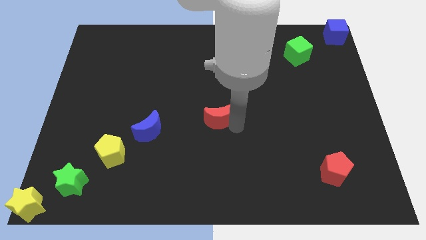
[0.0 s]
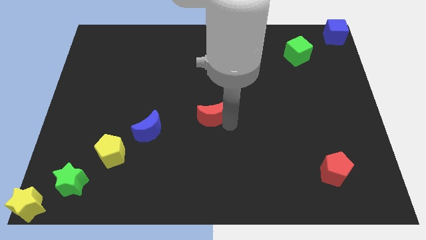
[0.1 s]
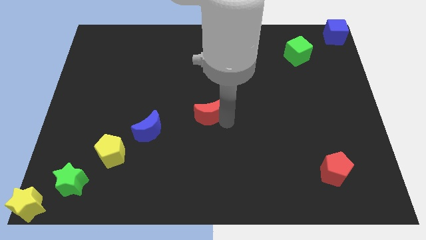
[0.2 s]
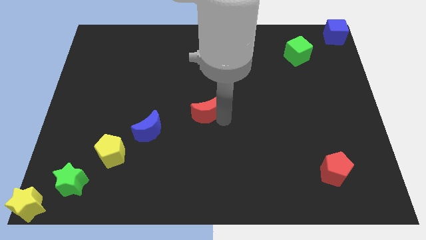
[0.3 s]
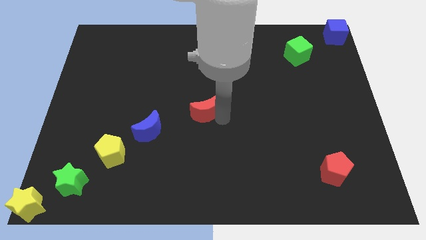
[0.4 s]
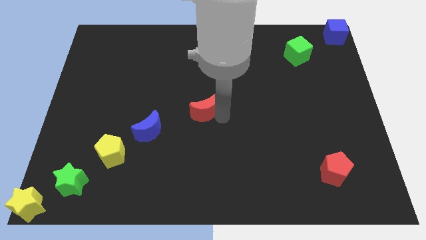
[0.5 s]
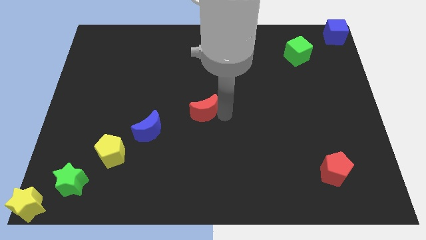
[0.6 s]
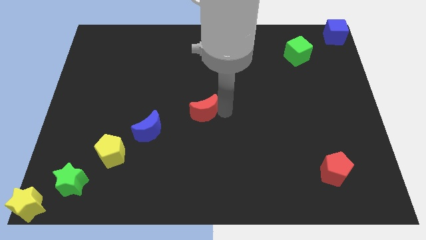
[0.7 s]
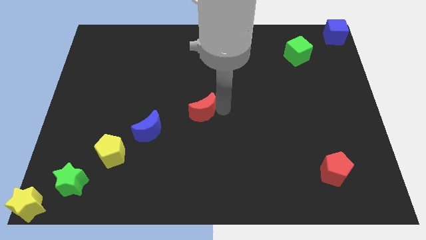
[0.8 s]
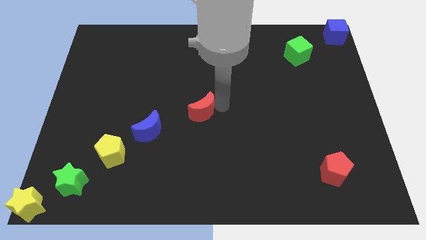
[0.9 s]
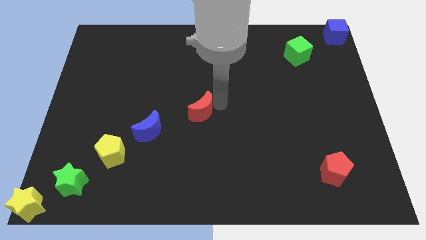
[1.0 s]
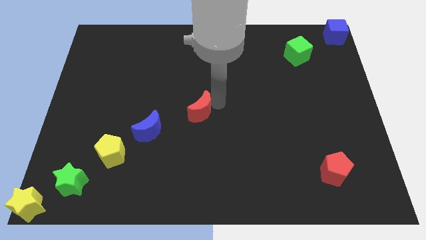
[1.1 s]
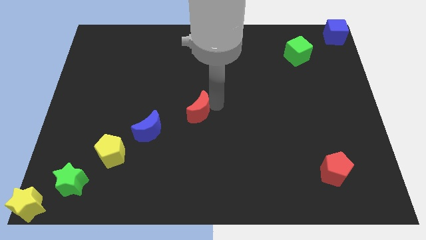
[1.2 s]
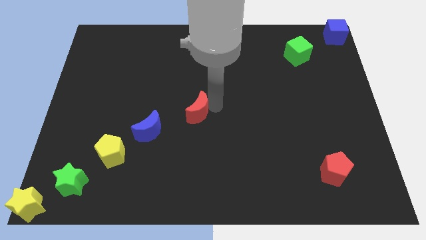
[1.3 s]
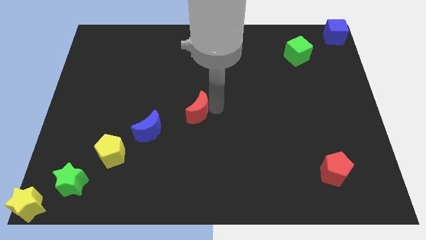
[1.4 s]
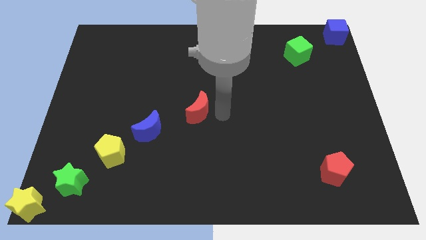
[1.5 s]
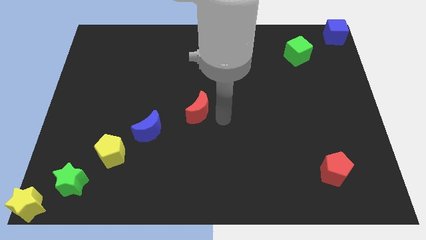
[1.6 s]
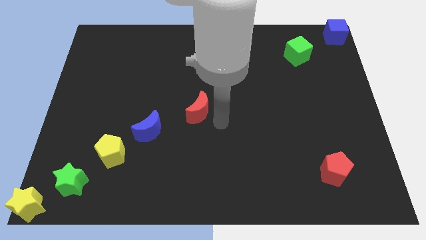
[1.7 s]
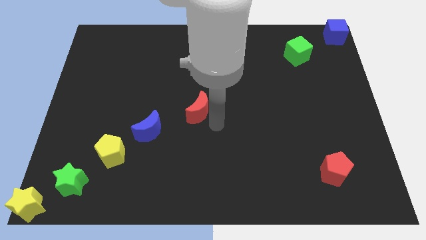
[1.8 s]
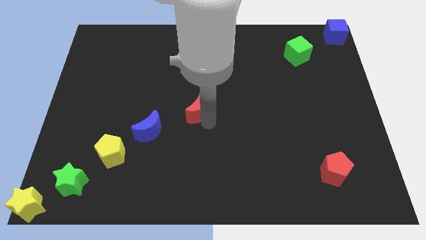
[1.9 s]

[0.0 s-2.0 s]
slide the red moon diagonally top right to the blue moon

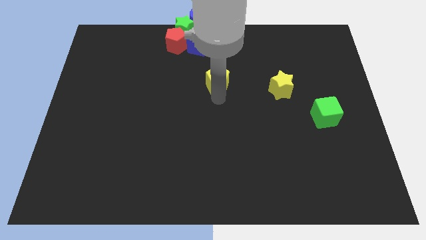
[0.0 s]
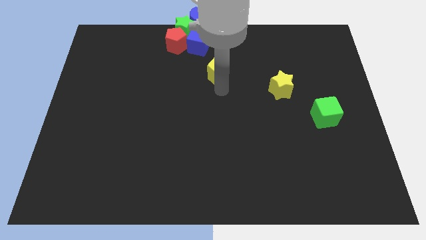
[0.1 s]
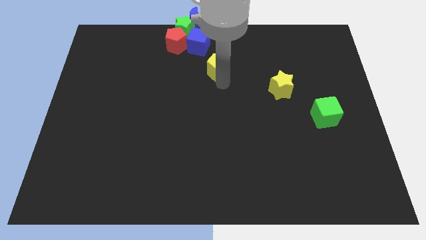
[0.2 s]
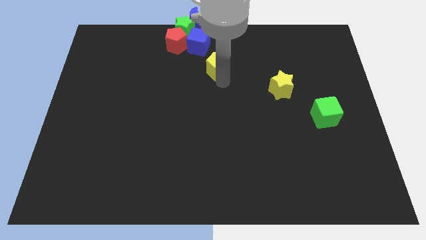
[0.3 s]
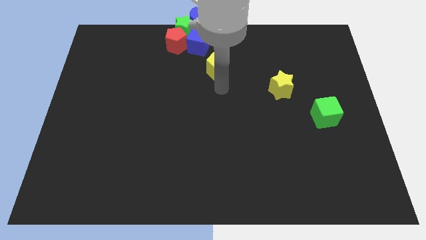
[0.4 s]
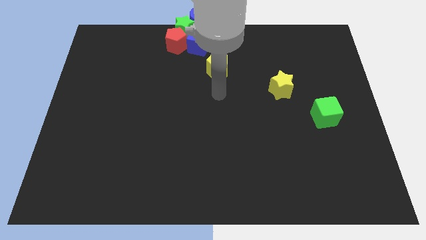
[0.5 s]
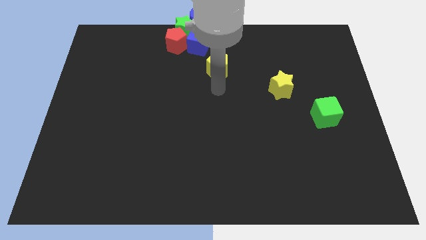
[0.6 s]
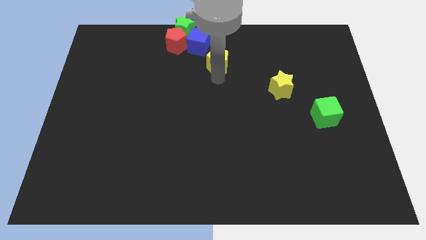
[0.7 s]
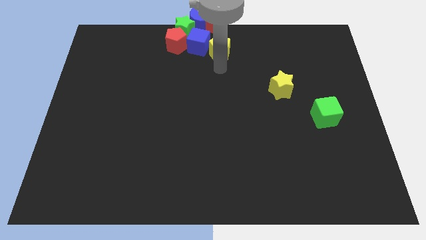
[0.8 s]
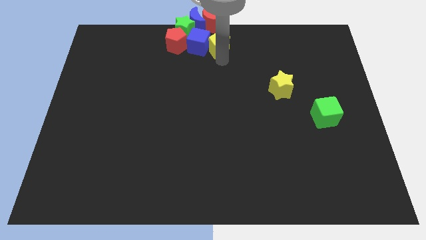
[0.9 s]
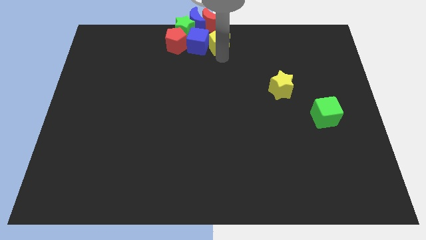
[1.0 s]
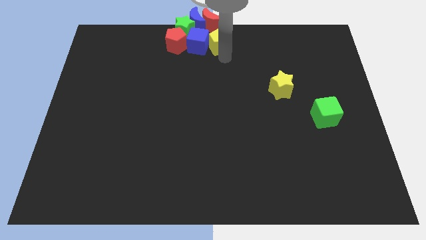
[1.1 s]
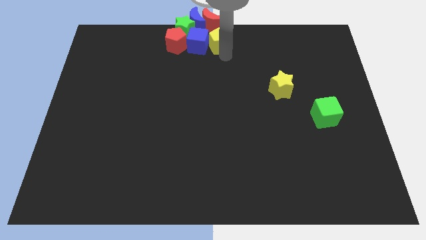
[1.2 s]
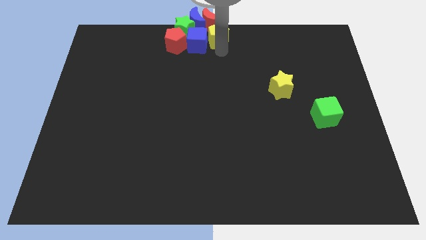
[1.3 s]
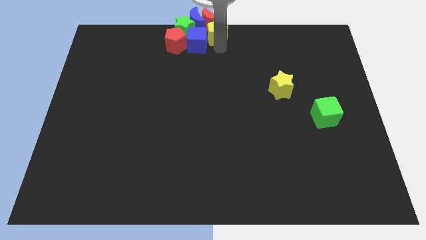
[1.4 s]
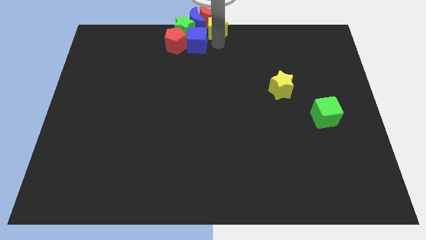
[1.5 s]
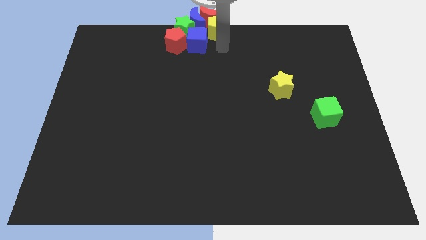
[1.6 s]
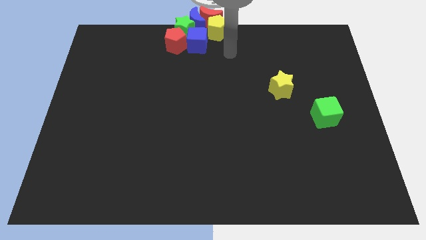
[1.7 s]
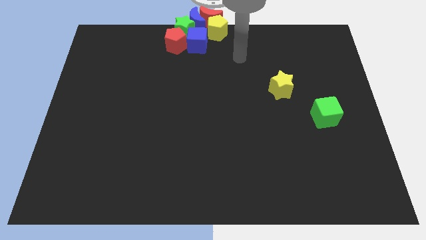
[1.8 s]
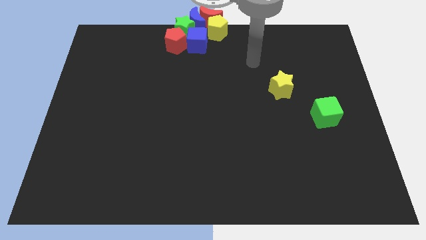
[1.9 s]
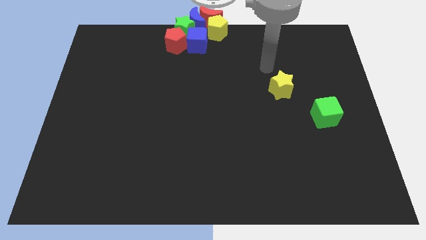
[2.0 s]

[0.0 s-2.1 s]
push yellow pentagon into red crescent

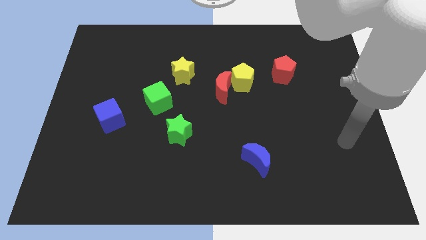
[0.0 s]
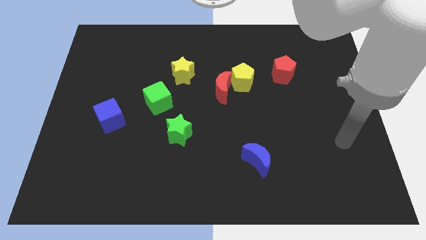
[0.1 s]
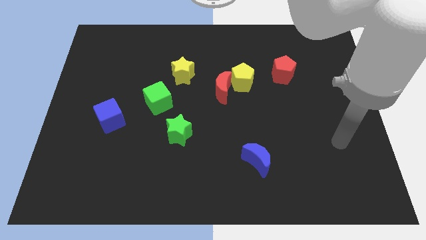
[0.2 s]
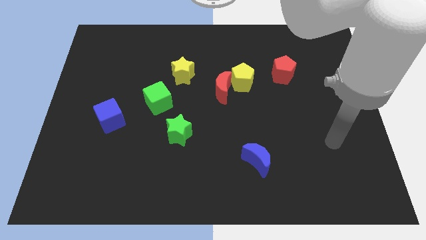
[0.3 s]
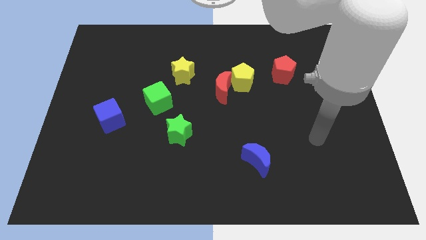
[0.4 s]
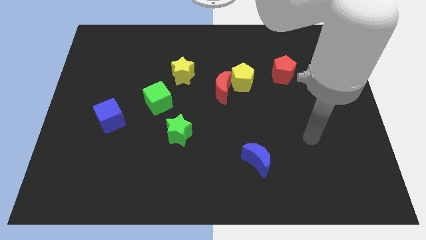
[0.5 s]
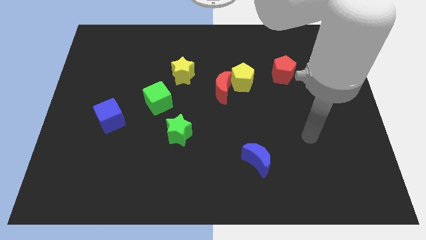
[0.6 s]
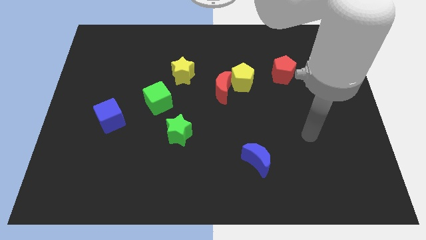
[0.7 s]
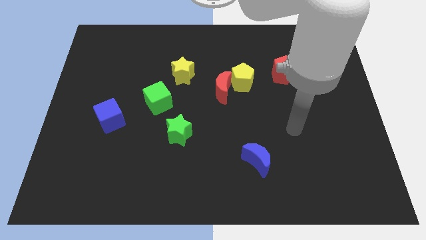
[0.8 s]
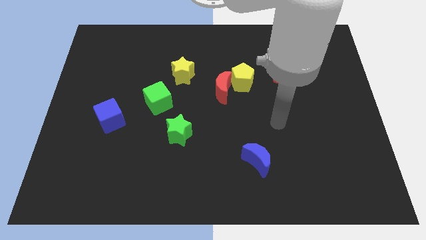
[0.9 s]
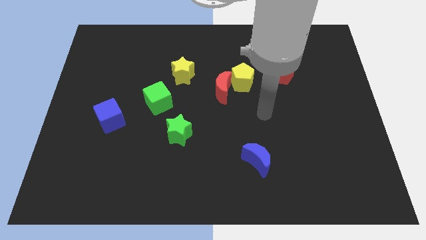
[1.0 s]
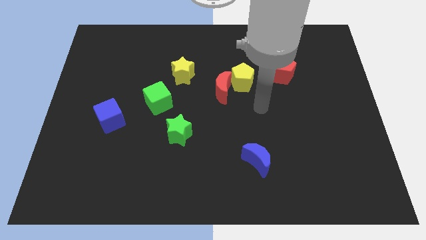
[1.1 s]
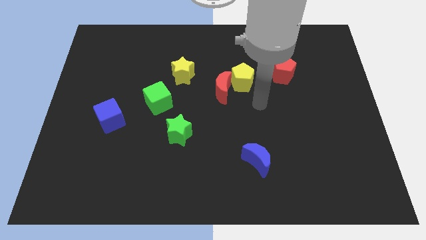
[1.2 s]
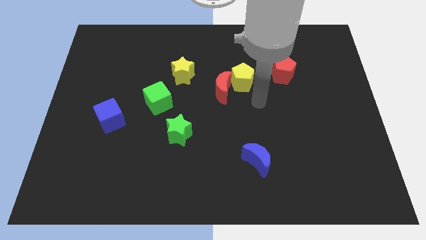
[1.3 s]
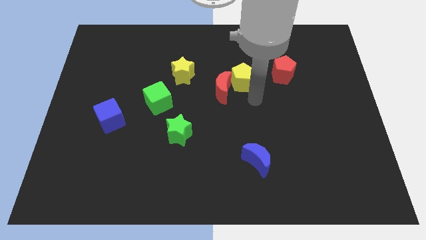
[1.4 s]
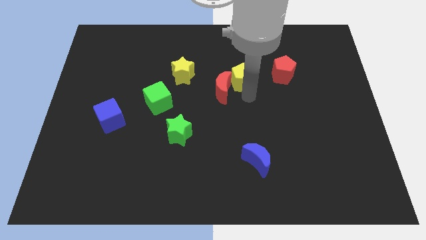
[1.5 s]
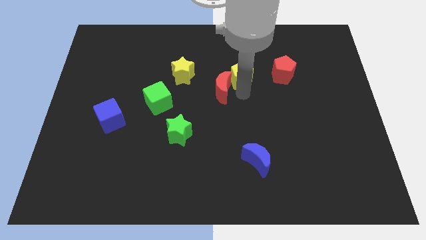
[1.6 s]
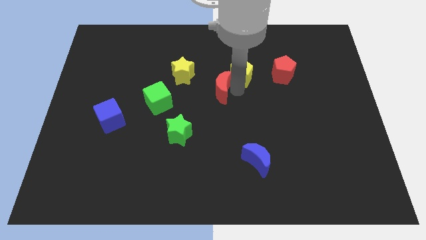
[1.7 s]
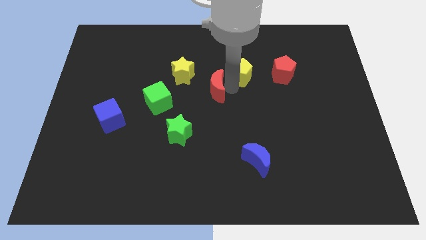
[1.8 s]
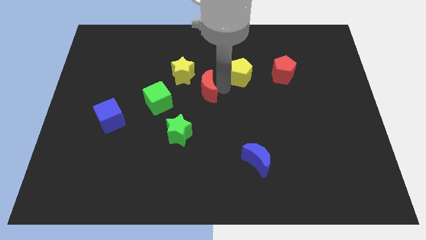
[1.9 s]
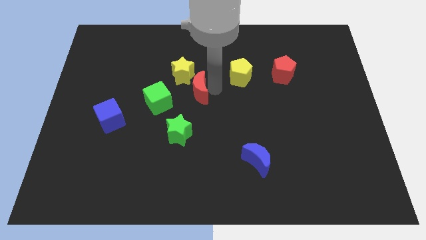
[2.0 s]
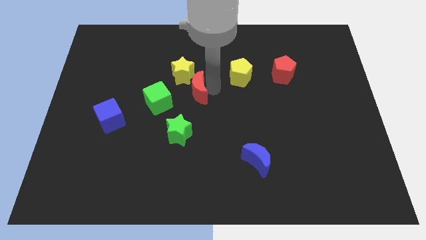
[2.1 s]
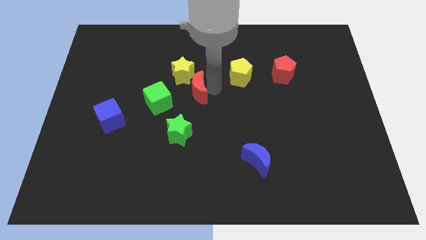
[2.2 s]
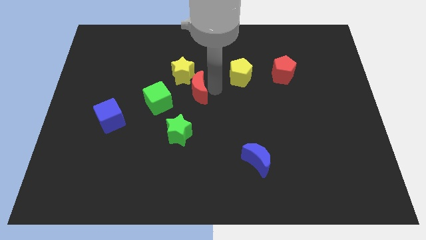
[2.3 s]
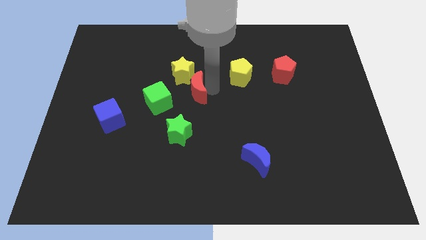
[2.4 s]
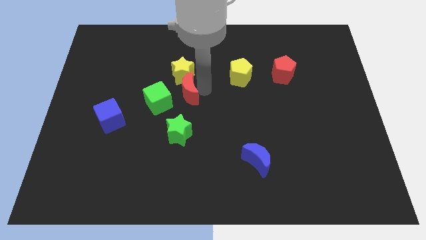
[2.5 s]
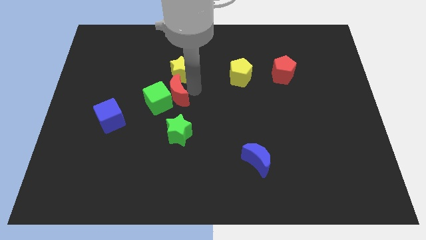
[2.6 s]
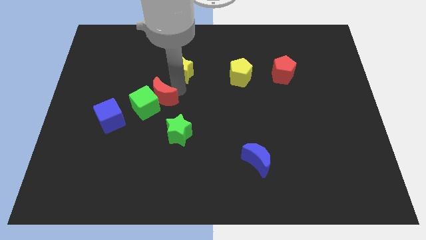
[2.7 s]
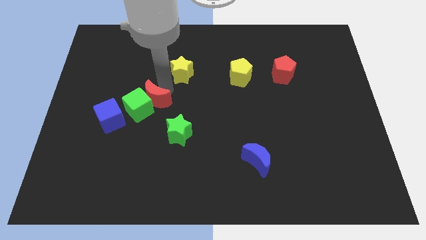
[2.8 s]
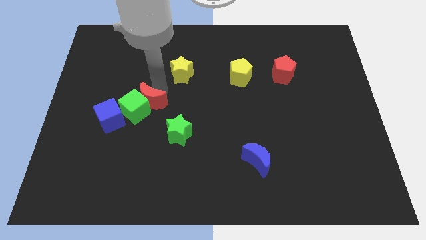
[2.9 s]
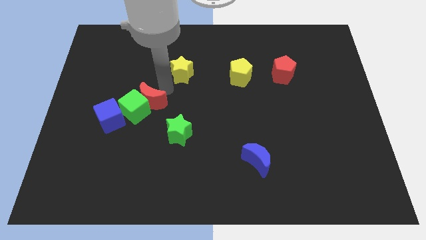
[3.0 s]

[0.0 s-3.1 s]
drag the red moon and green cube into the top right side of the blue cube

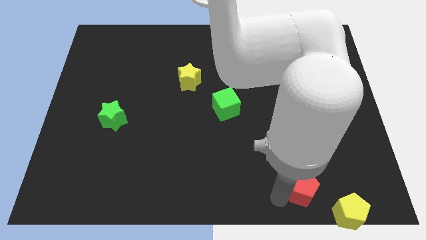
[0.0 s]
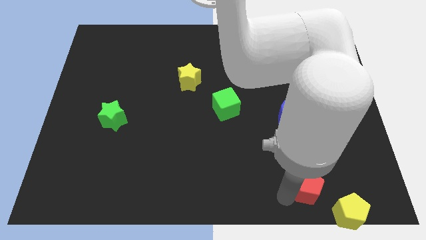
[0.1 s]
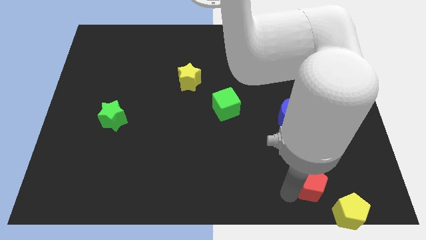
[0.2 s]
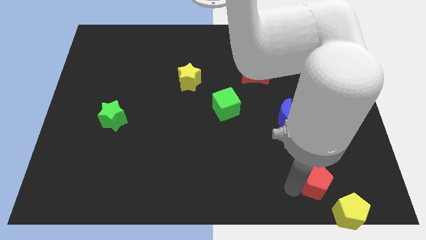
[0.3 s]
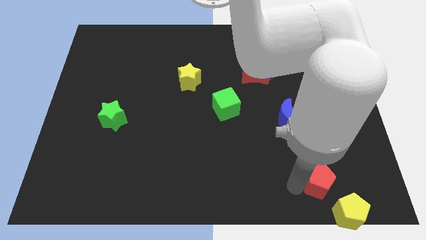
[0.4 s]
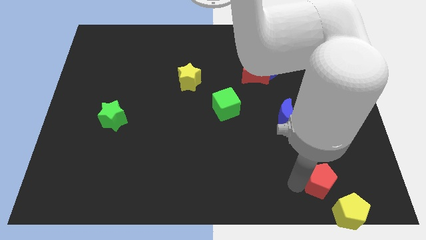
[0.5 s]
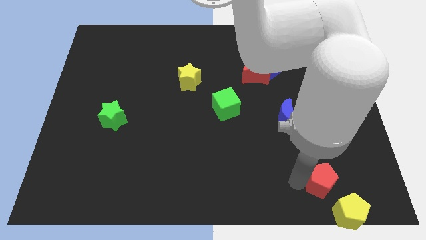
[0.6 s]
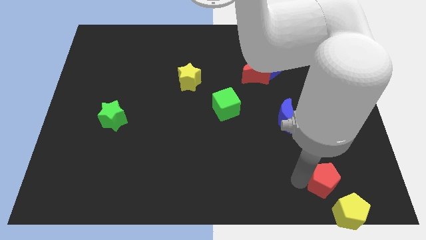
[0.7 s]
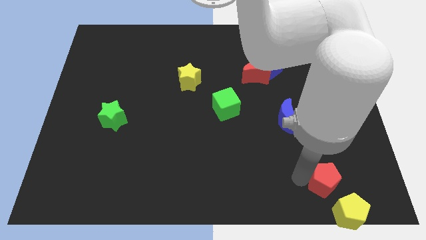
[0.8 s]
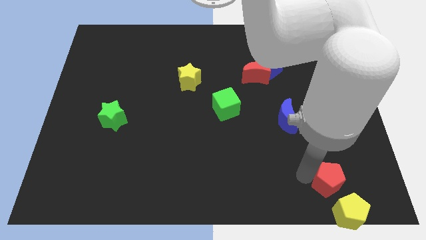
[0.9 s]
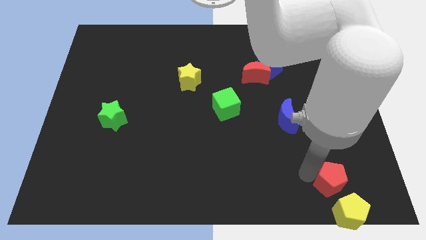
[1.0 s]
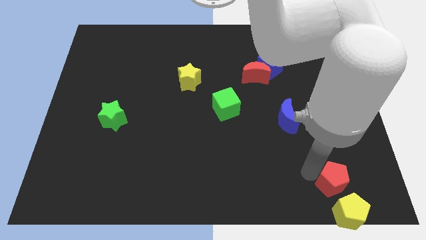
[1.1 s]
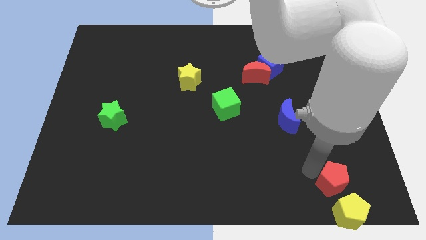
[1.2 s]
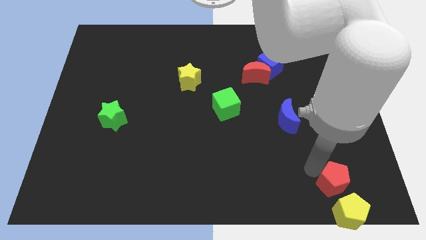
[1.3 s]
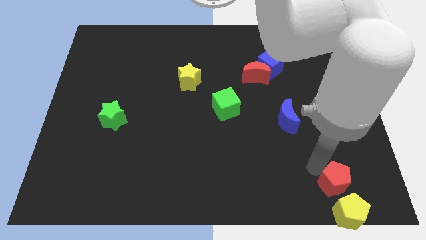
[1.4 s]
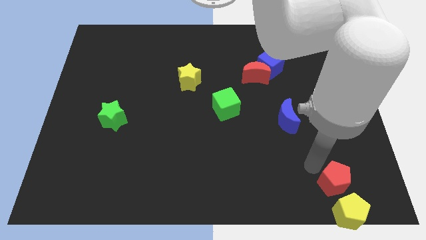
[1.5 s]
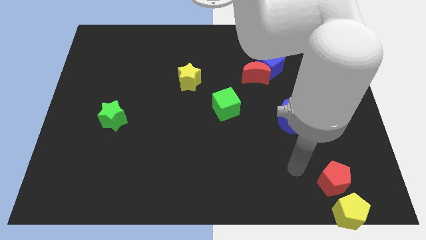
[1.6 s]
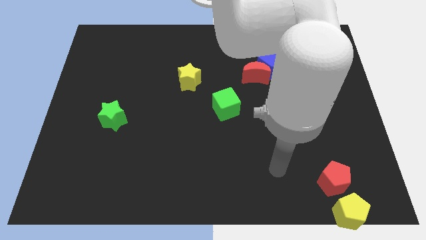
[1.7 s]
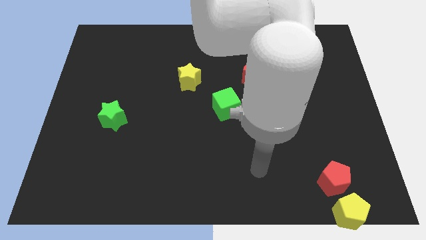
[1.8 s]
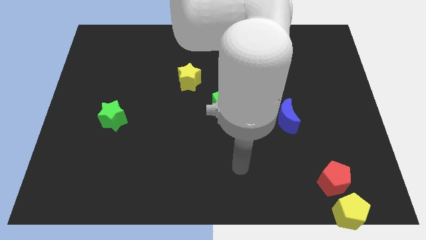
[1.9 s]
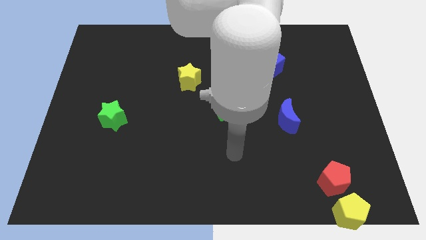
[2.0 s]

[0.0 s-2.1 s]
put the red pentagon at the top left of the yellow pentagon
